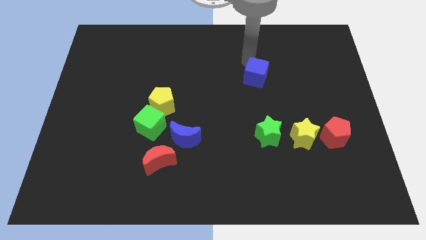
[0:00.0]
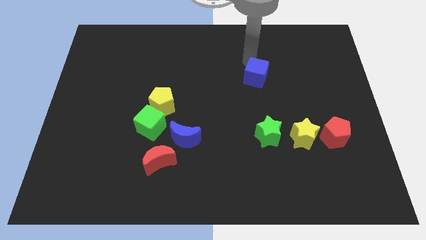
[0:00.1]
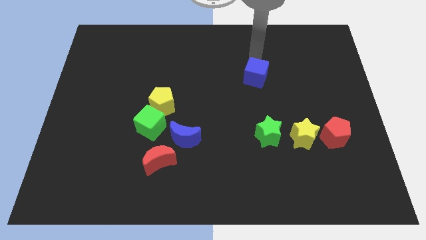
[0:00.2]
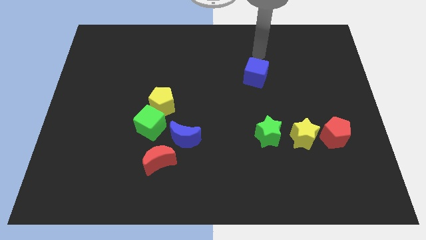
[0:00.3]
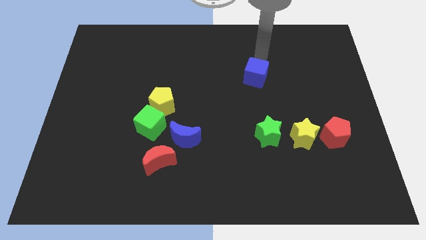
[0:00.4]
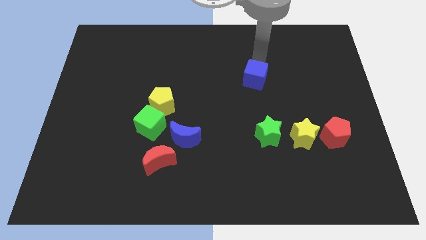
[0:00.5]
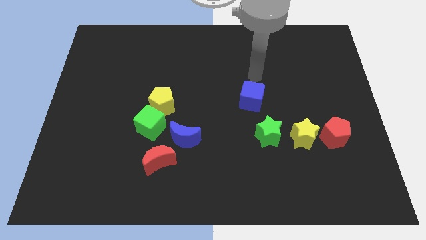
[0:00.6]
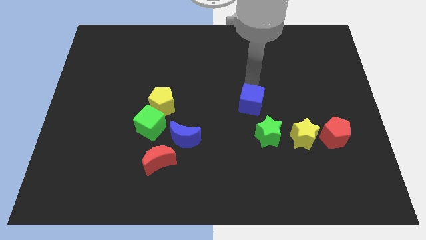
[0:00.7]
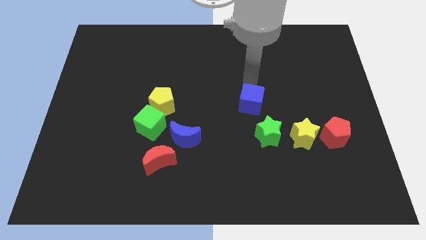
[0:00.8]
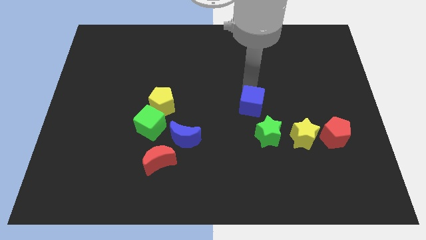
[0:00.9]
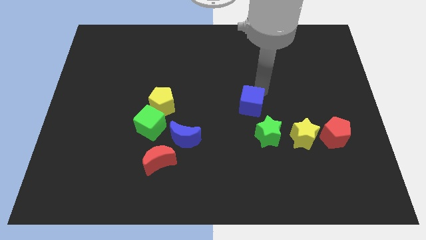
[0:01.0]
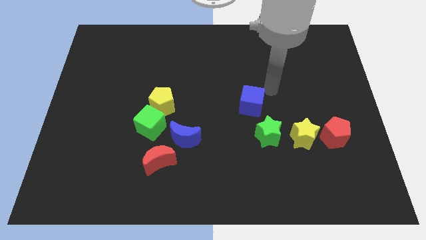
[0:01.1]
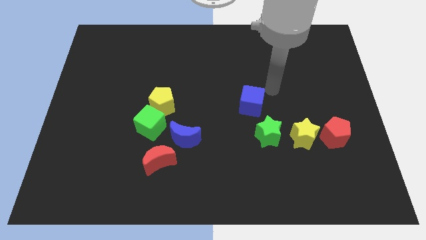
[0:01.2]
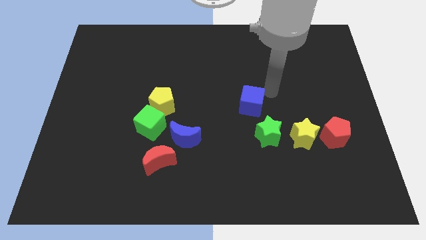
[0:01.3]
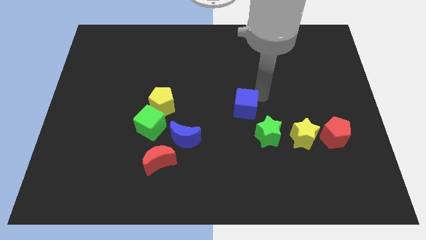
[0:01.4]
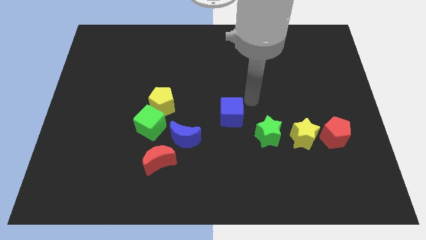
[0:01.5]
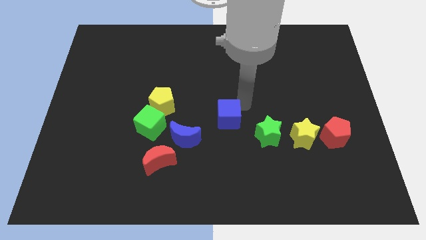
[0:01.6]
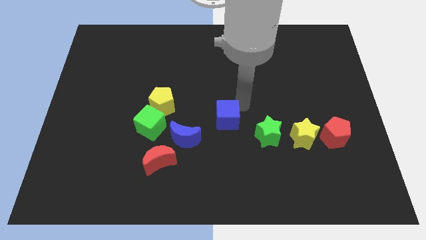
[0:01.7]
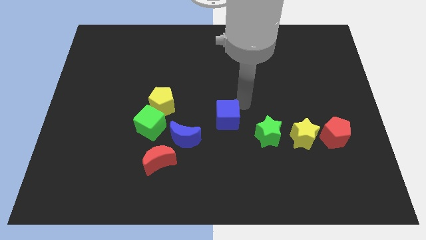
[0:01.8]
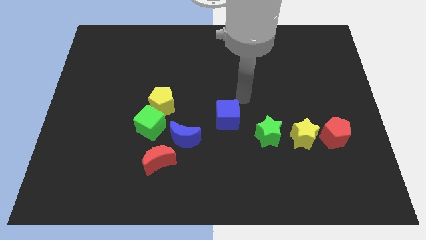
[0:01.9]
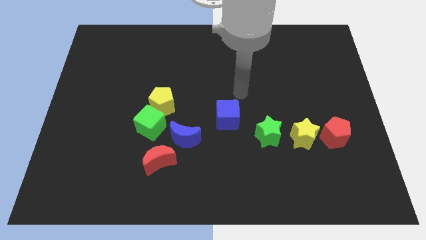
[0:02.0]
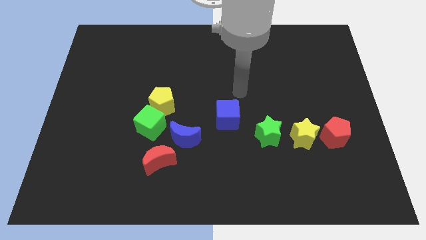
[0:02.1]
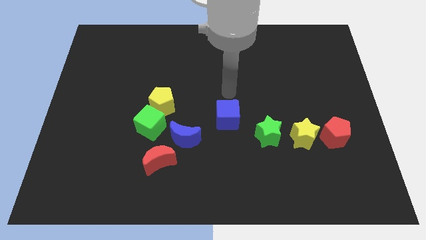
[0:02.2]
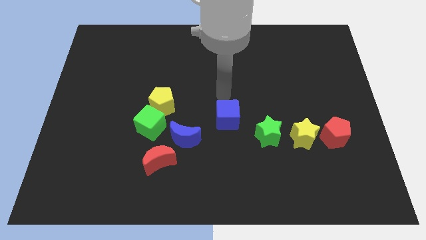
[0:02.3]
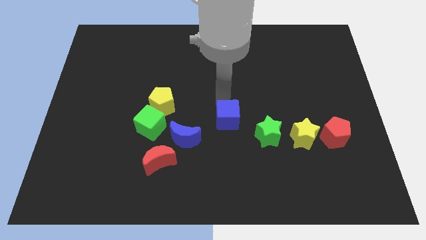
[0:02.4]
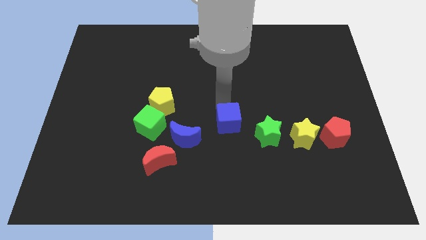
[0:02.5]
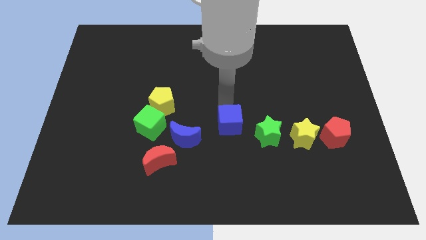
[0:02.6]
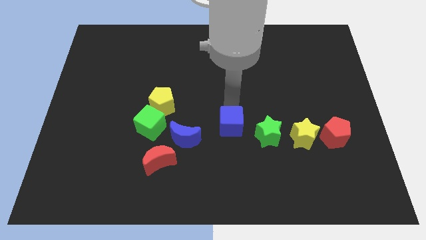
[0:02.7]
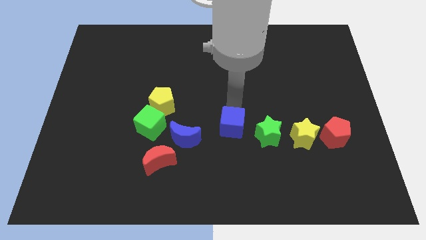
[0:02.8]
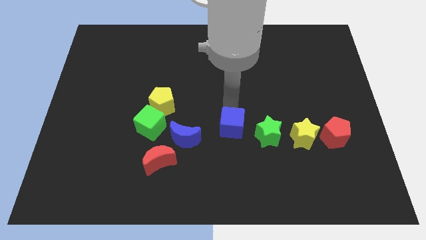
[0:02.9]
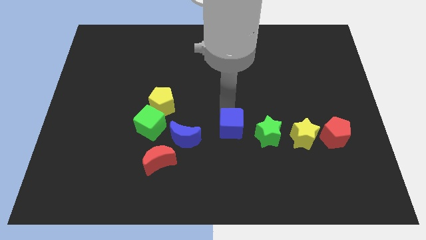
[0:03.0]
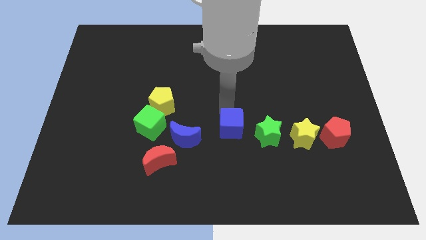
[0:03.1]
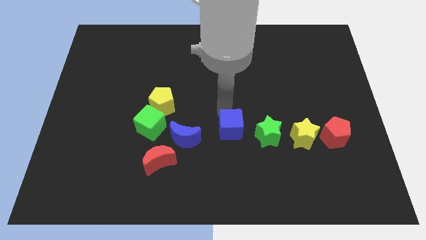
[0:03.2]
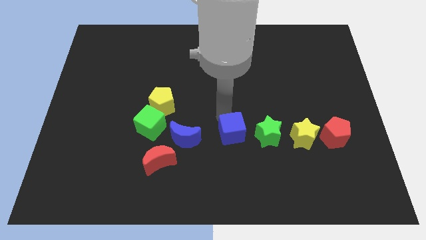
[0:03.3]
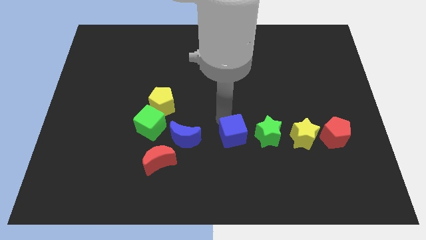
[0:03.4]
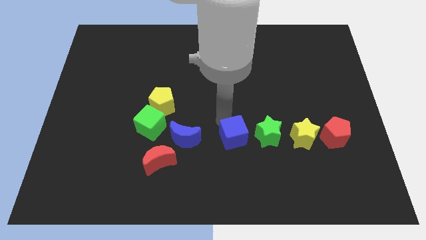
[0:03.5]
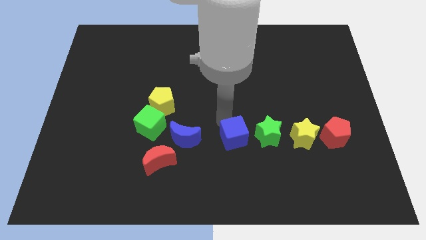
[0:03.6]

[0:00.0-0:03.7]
move the blue cube in between the green star and blue moon

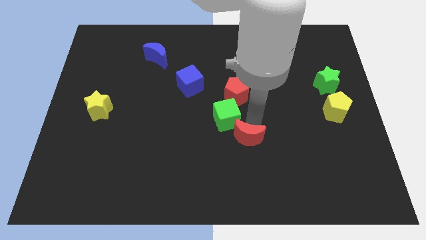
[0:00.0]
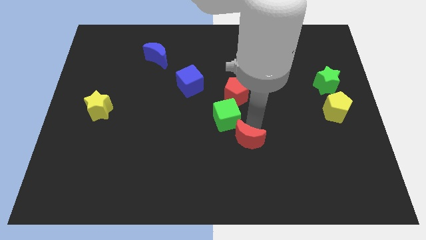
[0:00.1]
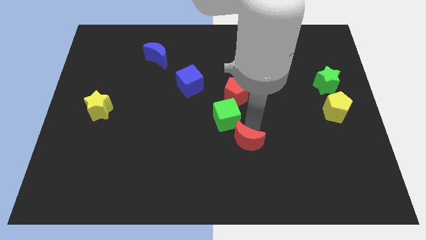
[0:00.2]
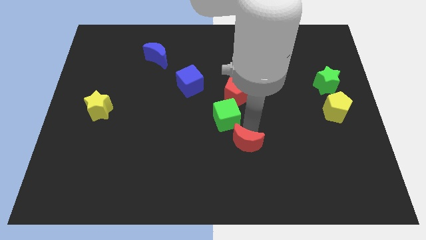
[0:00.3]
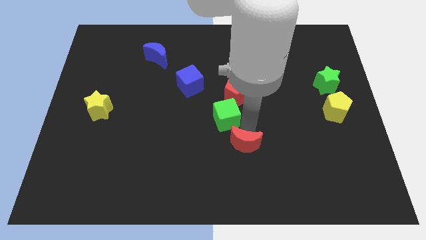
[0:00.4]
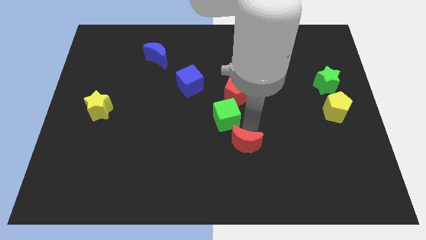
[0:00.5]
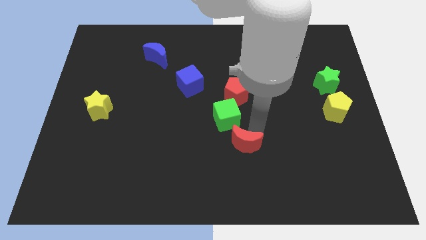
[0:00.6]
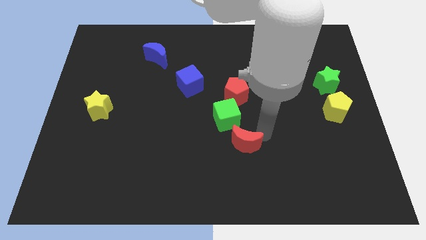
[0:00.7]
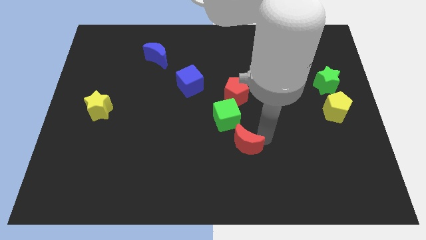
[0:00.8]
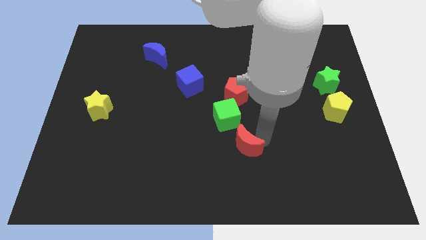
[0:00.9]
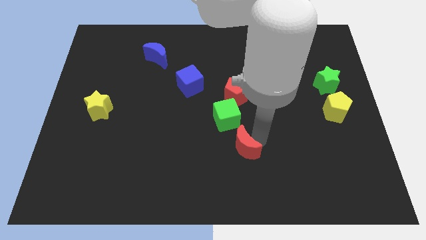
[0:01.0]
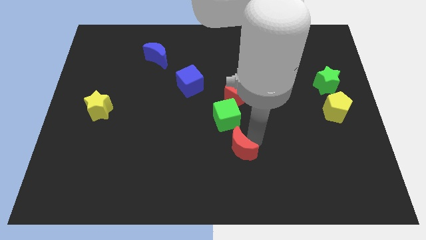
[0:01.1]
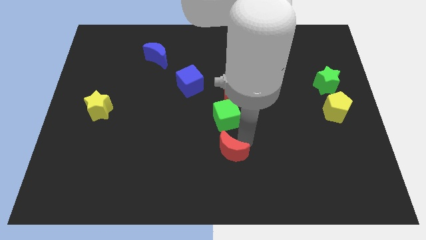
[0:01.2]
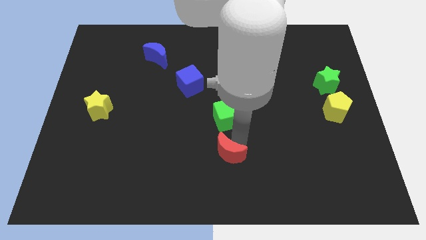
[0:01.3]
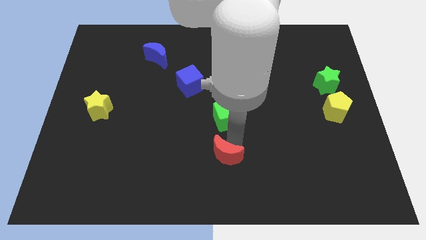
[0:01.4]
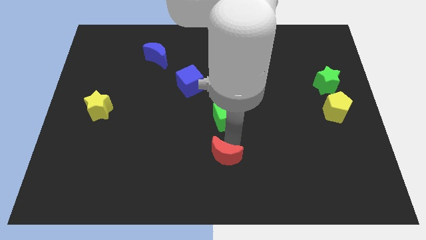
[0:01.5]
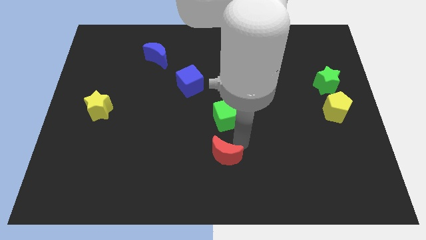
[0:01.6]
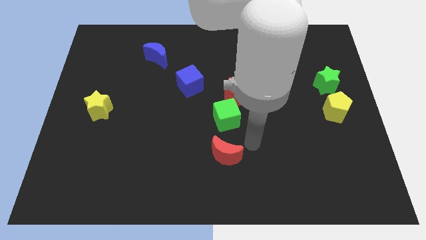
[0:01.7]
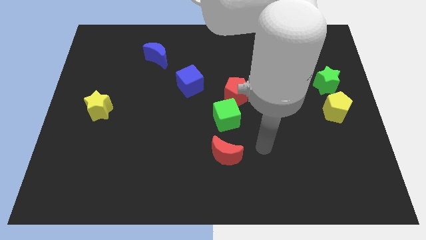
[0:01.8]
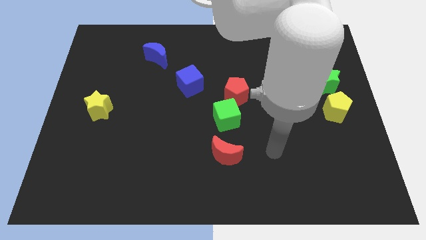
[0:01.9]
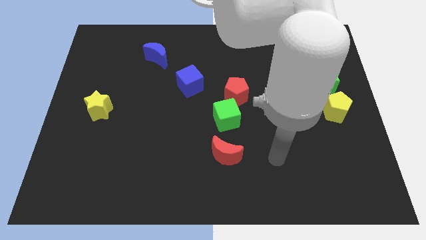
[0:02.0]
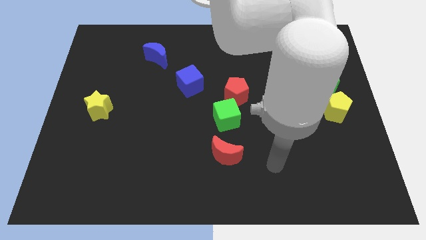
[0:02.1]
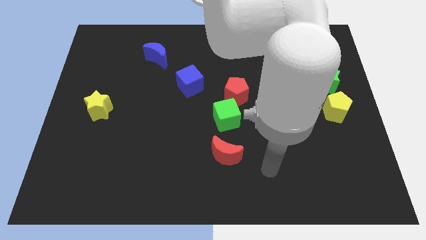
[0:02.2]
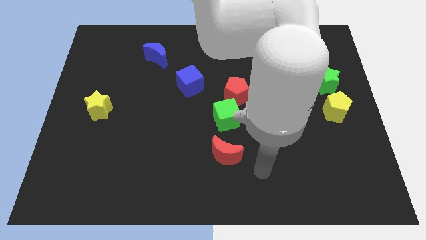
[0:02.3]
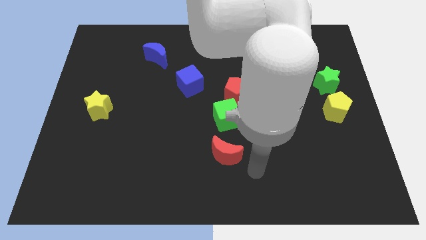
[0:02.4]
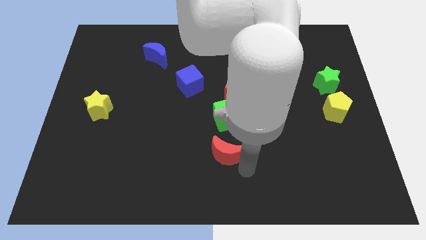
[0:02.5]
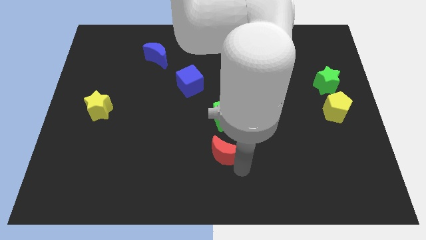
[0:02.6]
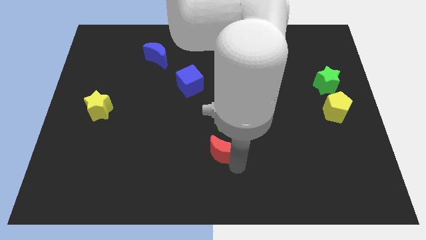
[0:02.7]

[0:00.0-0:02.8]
push the red moon downward

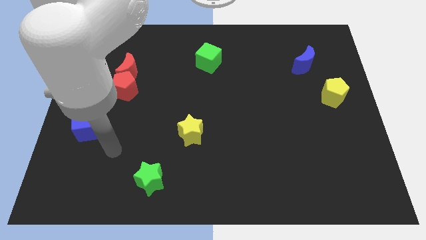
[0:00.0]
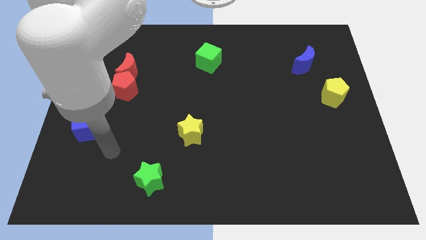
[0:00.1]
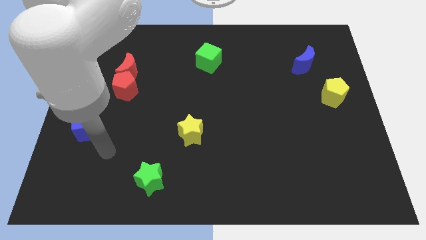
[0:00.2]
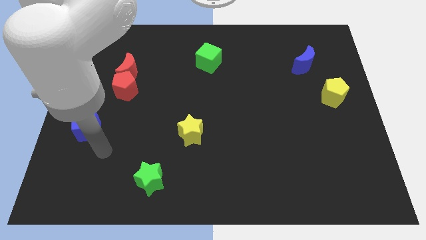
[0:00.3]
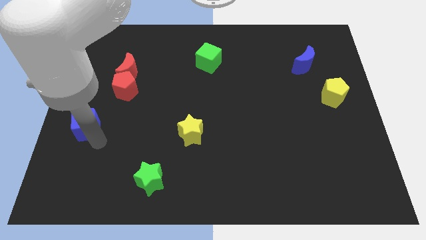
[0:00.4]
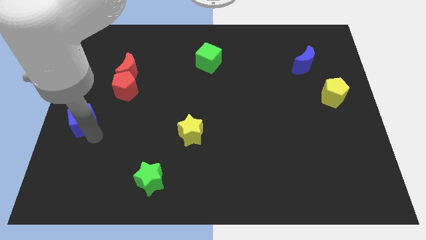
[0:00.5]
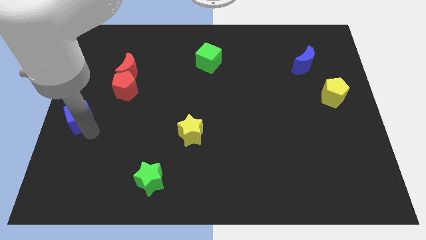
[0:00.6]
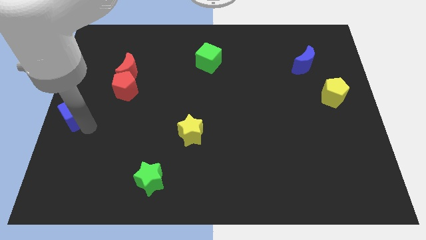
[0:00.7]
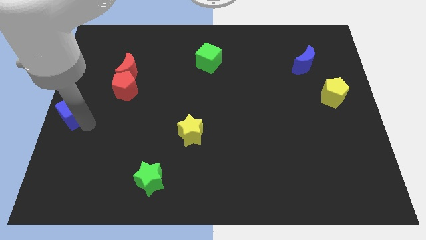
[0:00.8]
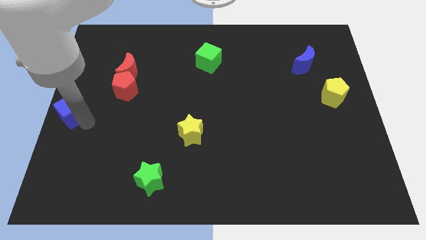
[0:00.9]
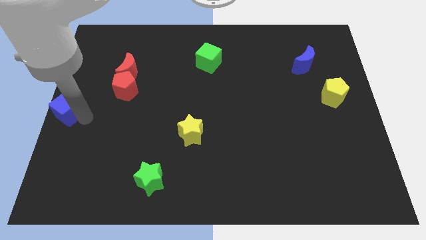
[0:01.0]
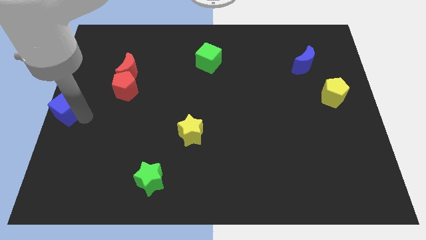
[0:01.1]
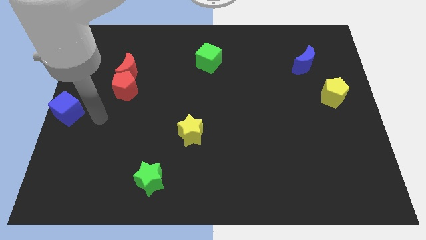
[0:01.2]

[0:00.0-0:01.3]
put the blue cube at the center left

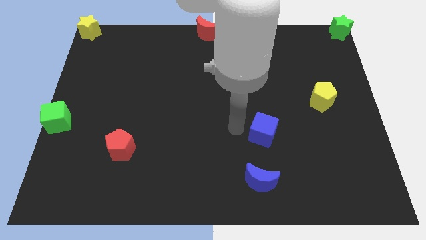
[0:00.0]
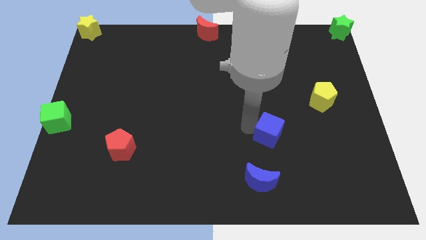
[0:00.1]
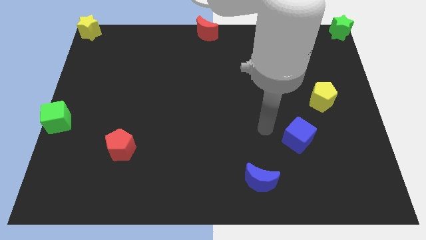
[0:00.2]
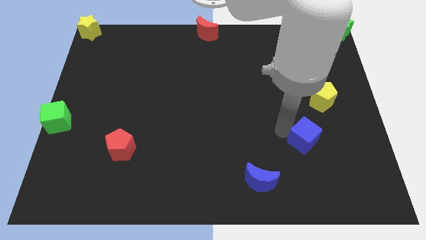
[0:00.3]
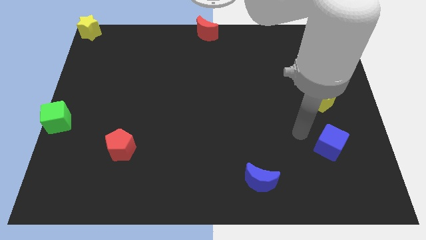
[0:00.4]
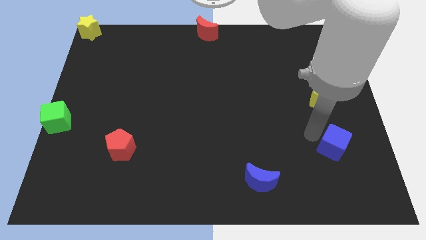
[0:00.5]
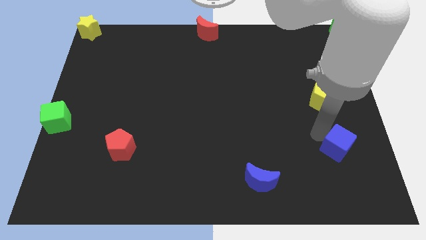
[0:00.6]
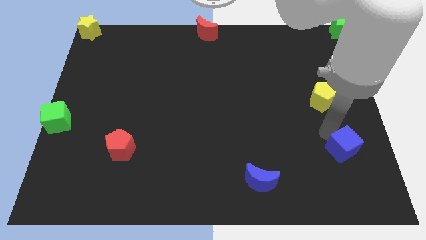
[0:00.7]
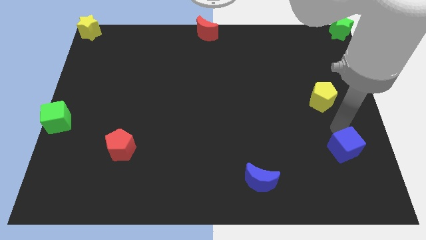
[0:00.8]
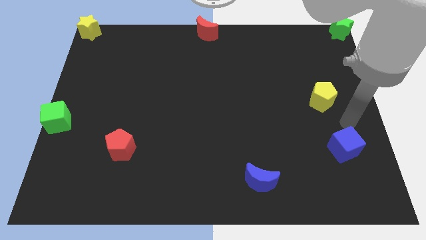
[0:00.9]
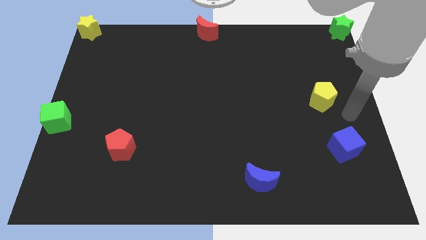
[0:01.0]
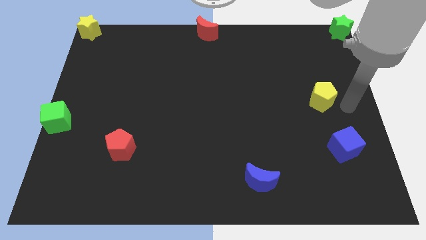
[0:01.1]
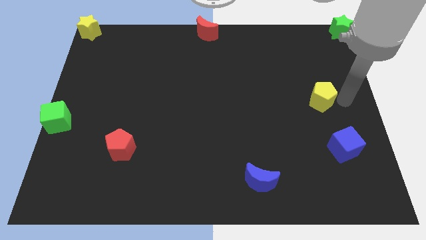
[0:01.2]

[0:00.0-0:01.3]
move the blue cube to the right side of the board
